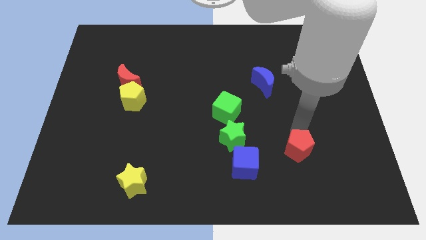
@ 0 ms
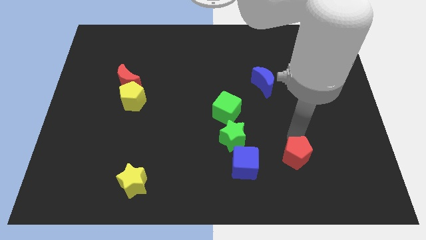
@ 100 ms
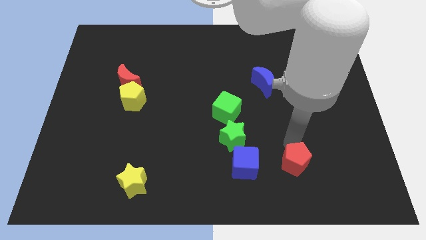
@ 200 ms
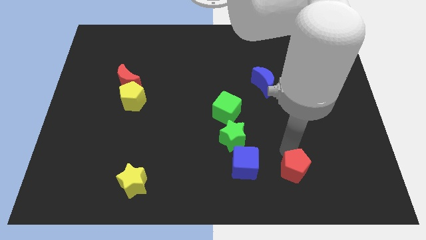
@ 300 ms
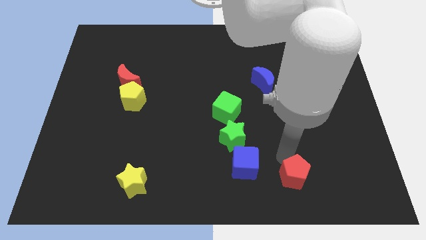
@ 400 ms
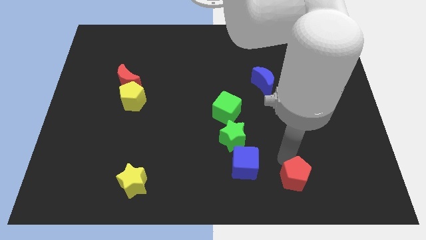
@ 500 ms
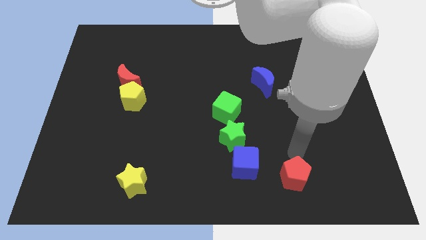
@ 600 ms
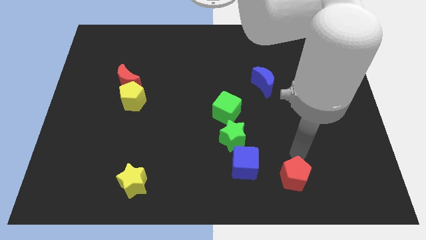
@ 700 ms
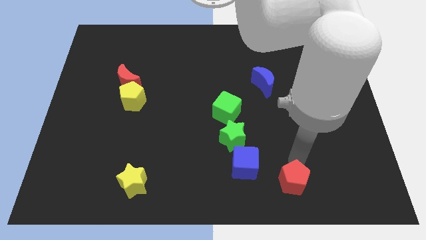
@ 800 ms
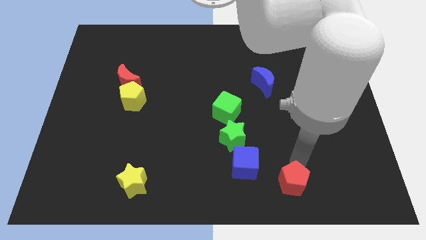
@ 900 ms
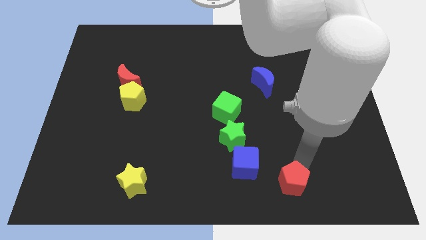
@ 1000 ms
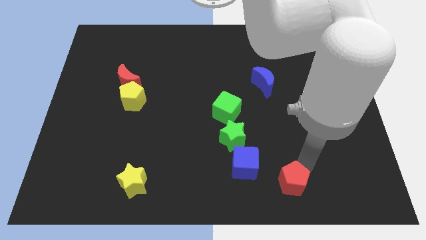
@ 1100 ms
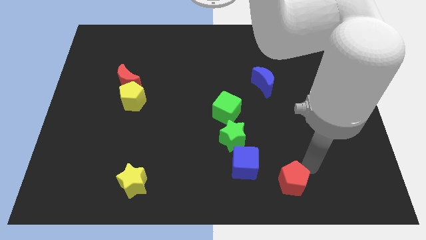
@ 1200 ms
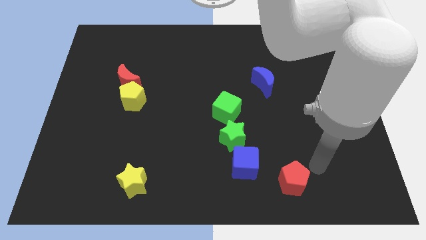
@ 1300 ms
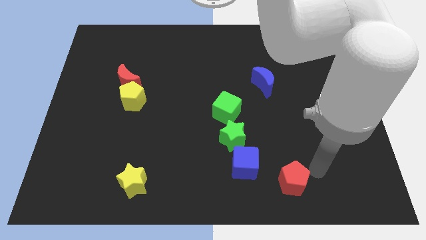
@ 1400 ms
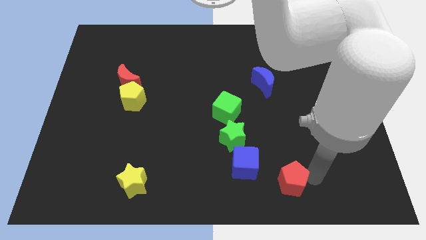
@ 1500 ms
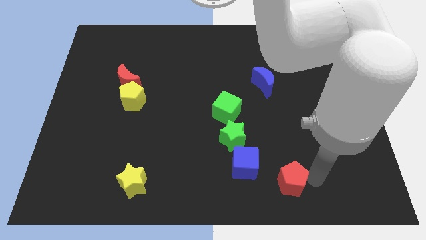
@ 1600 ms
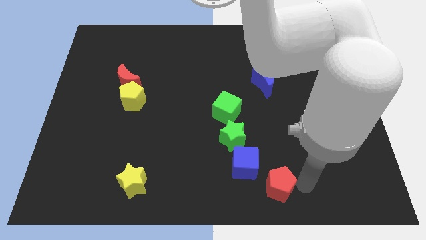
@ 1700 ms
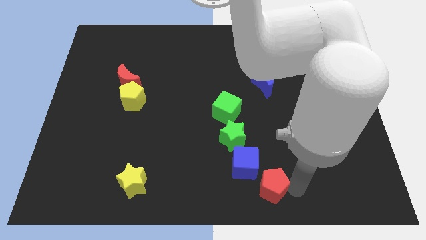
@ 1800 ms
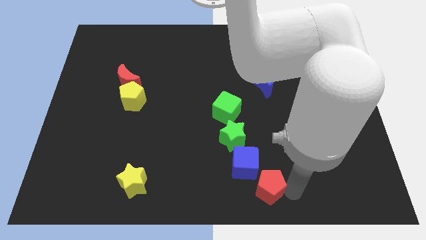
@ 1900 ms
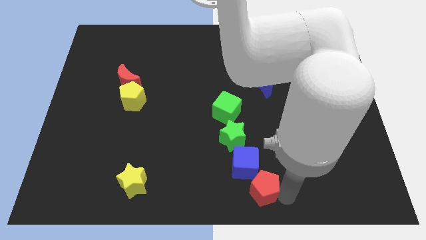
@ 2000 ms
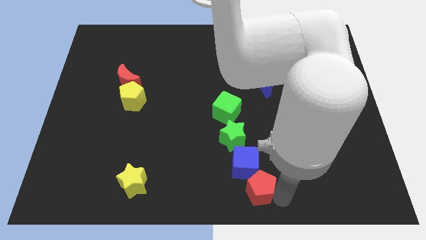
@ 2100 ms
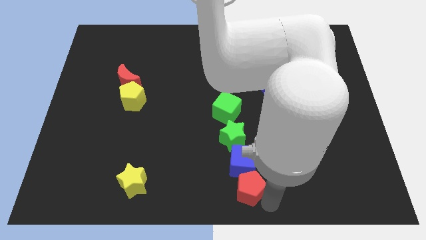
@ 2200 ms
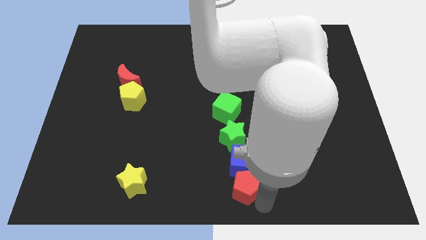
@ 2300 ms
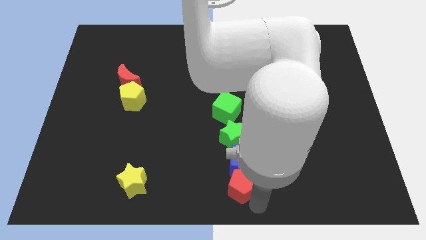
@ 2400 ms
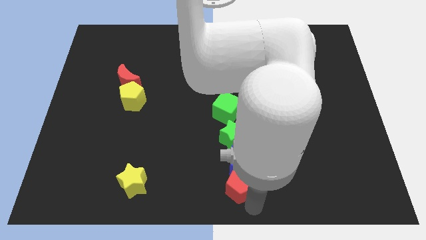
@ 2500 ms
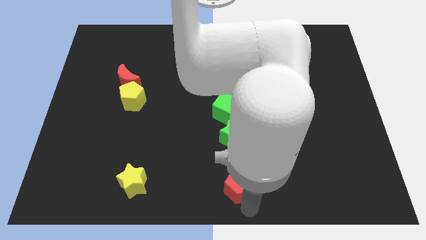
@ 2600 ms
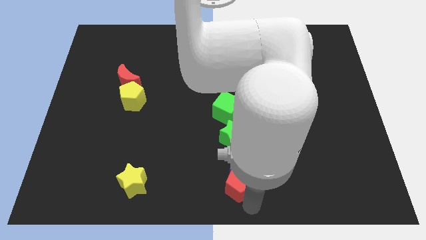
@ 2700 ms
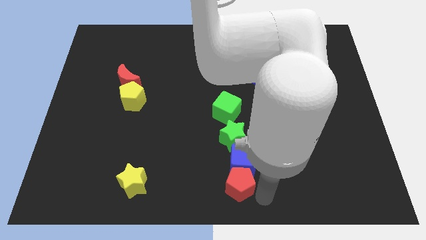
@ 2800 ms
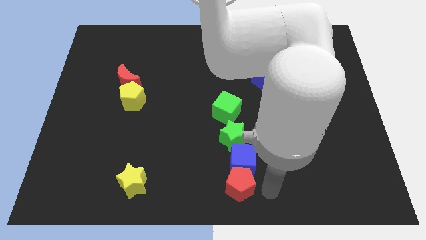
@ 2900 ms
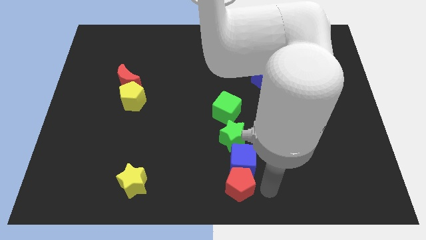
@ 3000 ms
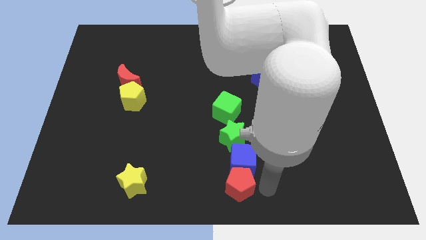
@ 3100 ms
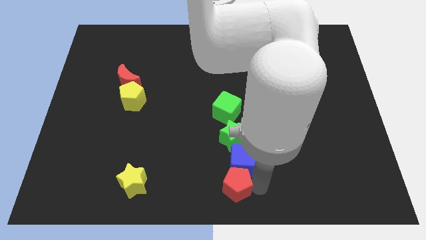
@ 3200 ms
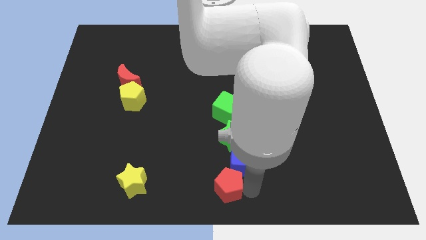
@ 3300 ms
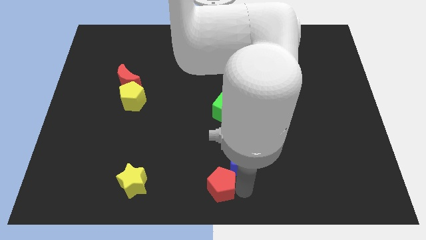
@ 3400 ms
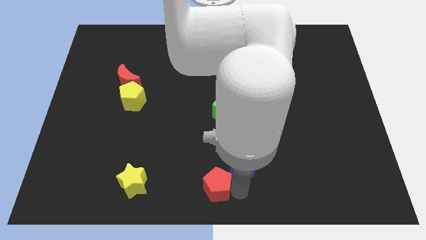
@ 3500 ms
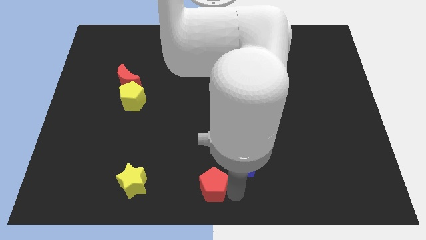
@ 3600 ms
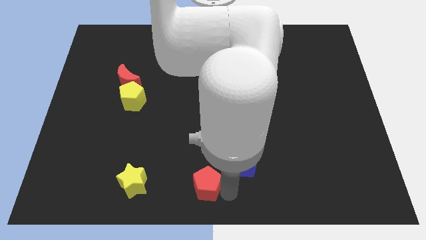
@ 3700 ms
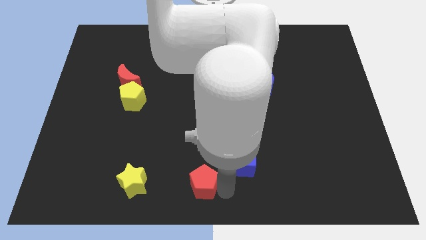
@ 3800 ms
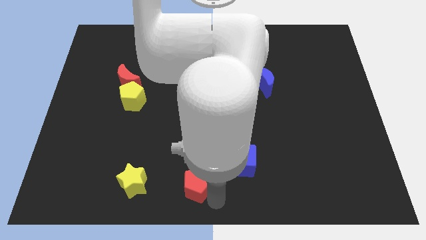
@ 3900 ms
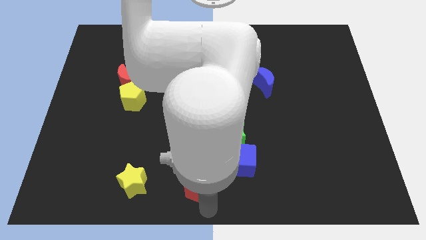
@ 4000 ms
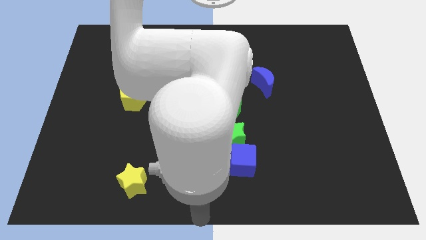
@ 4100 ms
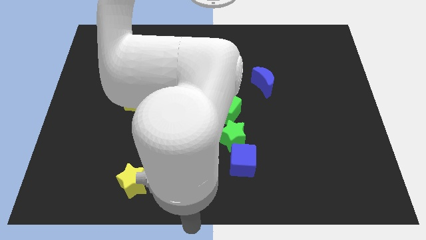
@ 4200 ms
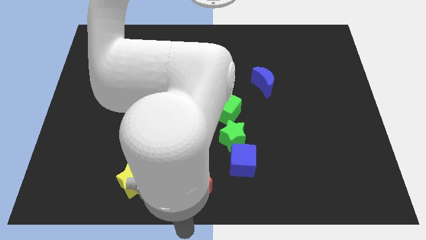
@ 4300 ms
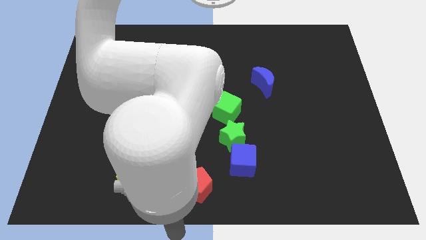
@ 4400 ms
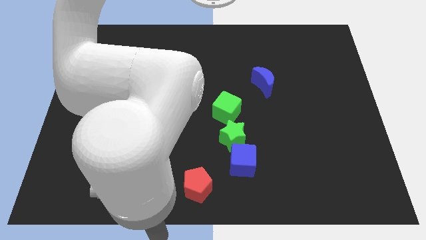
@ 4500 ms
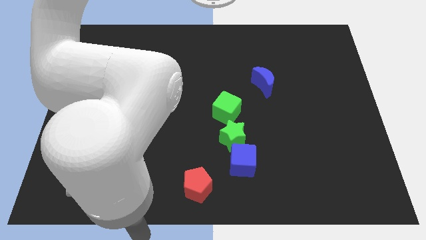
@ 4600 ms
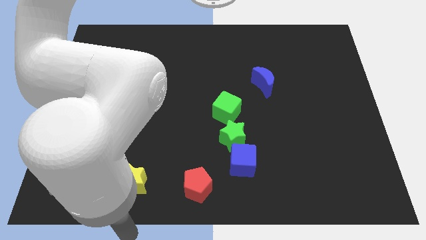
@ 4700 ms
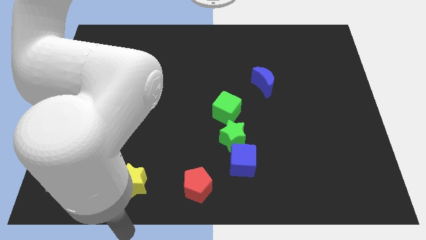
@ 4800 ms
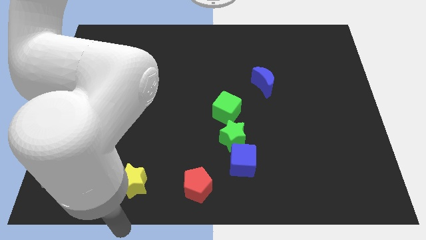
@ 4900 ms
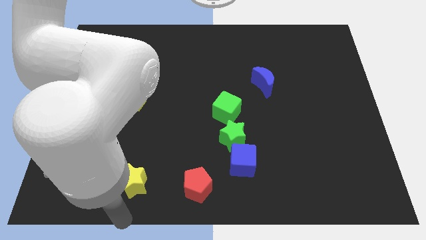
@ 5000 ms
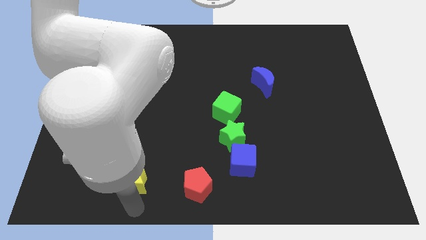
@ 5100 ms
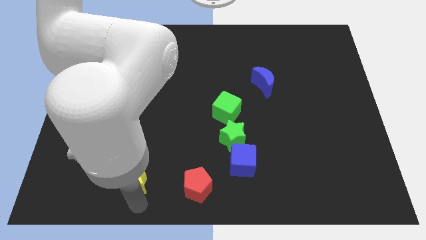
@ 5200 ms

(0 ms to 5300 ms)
move the red pentagon to the bottom center of the board

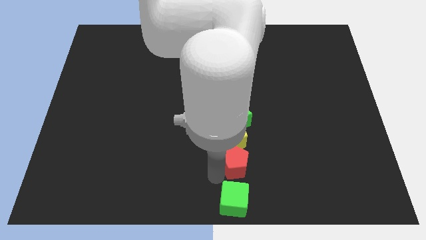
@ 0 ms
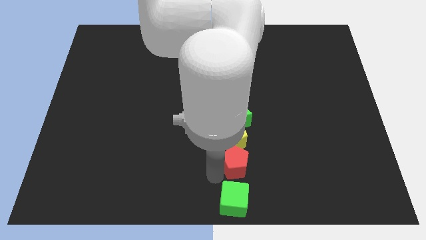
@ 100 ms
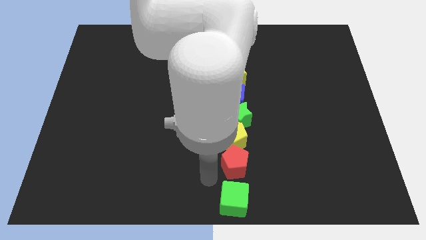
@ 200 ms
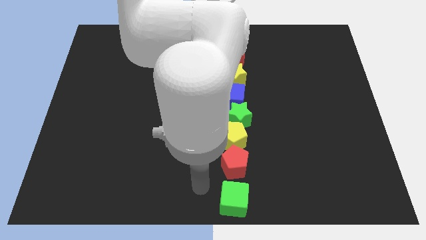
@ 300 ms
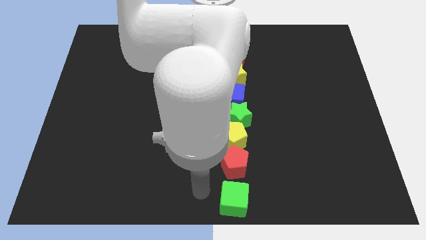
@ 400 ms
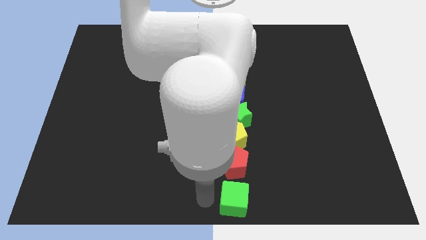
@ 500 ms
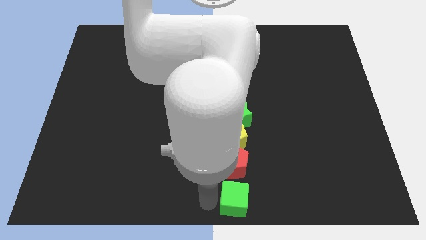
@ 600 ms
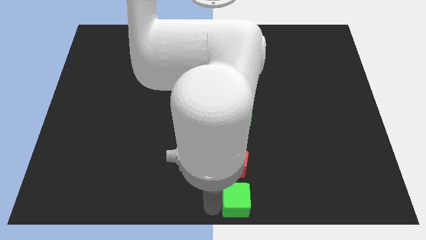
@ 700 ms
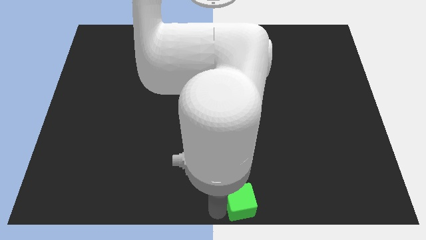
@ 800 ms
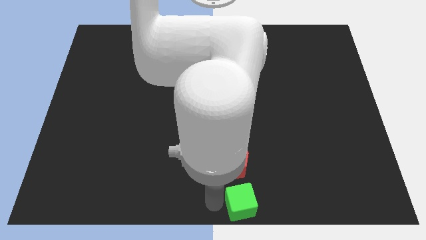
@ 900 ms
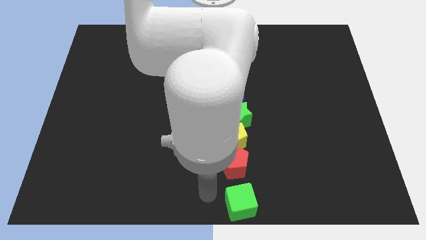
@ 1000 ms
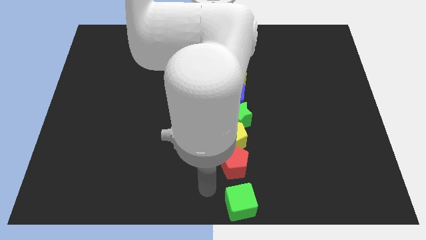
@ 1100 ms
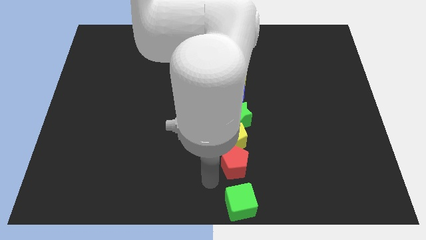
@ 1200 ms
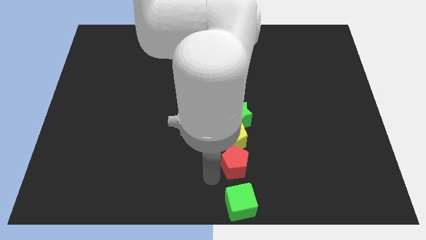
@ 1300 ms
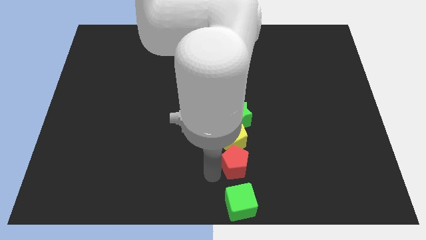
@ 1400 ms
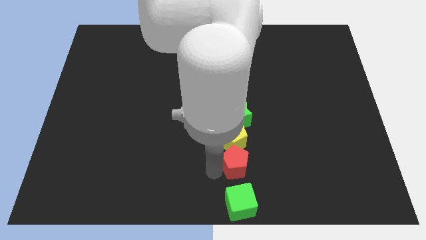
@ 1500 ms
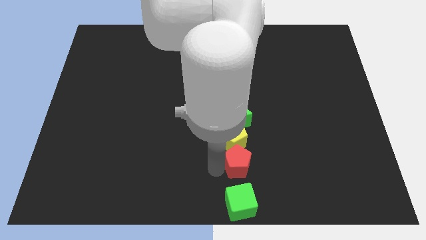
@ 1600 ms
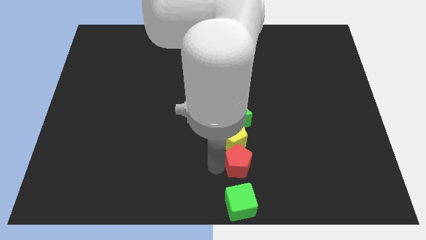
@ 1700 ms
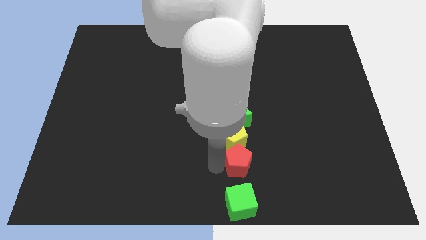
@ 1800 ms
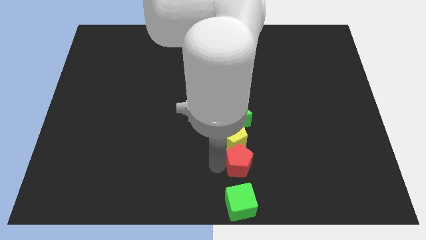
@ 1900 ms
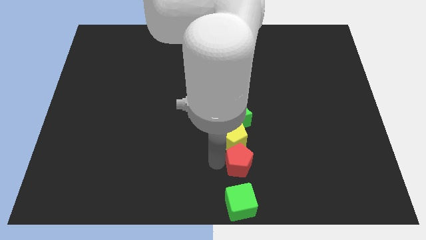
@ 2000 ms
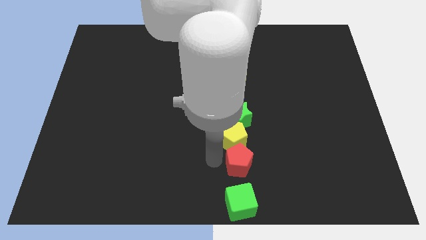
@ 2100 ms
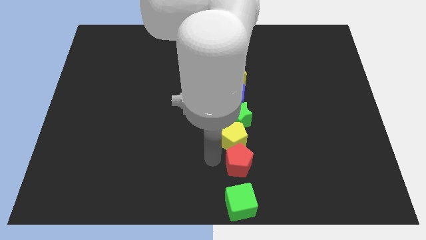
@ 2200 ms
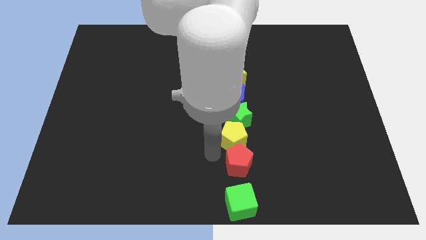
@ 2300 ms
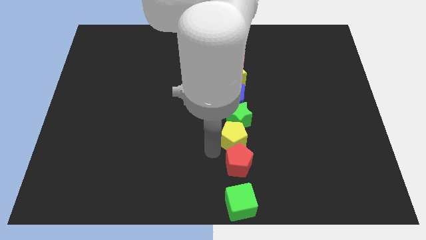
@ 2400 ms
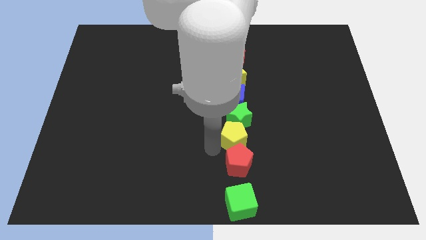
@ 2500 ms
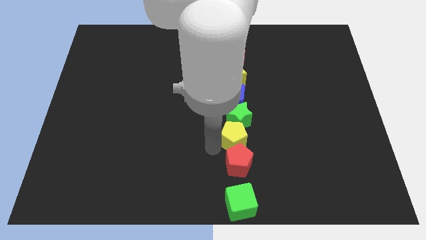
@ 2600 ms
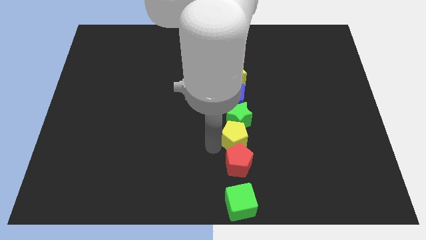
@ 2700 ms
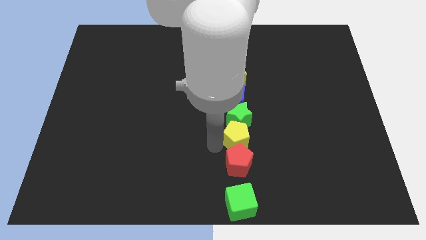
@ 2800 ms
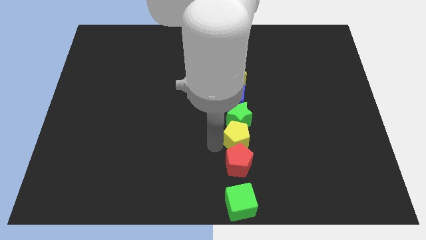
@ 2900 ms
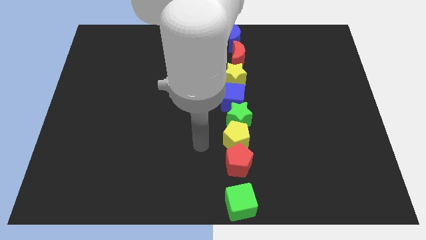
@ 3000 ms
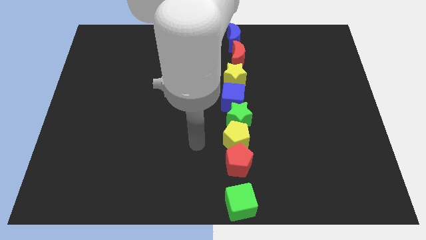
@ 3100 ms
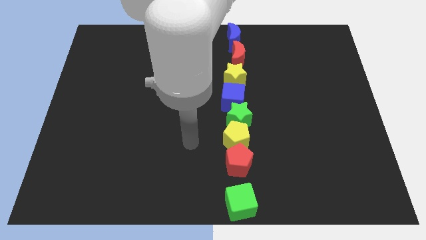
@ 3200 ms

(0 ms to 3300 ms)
slightly move the red and yellow pentagons to the right

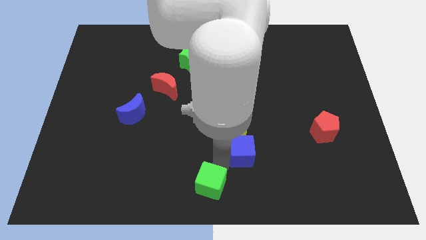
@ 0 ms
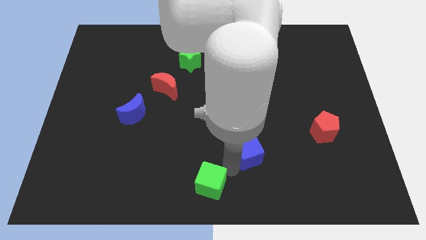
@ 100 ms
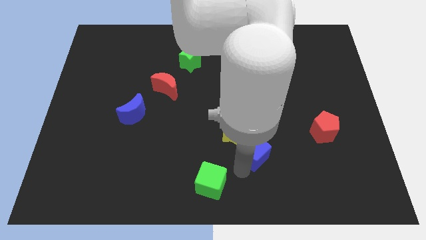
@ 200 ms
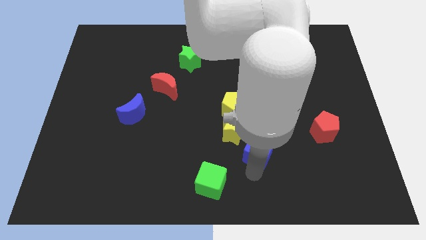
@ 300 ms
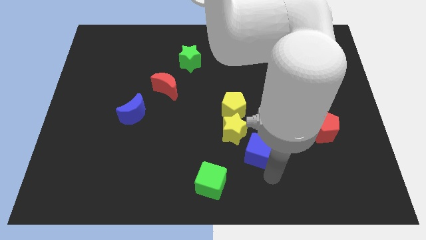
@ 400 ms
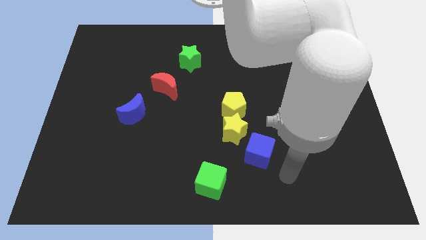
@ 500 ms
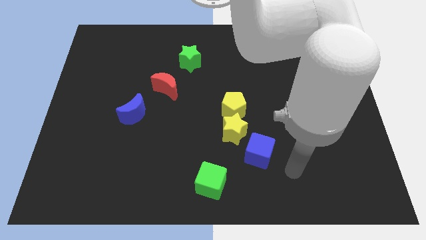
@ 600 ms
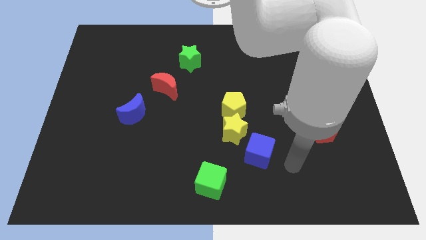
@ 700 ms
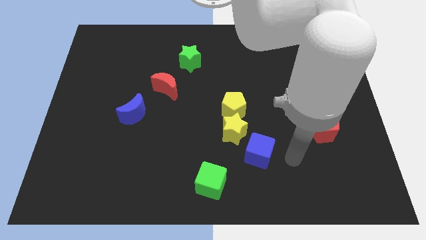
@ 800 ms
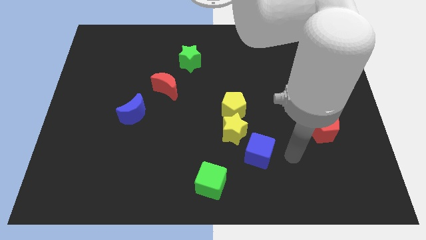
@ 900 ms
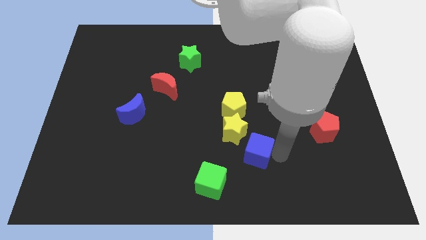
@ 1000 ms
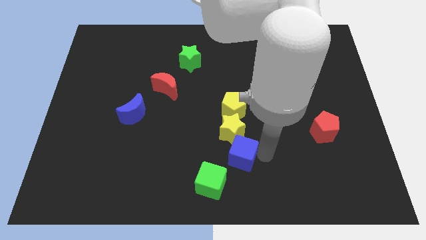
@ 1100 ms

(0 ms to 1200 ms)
place the blue cube right diagonally towards yellow star
